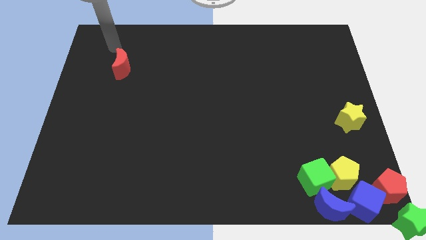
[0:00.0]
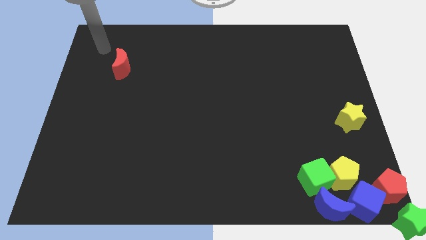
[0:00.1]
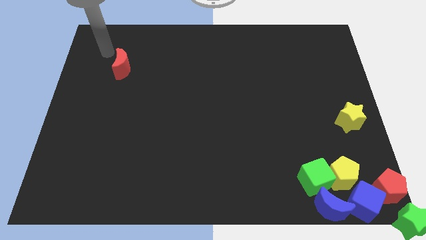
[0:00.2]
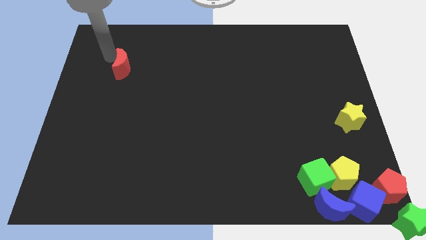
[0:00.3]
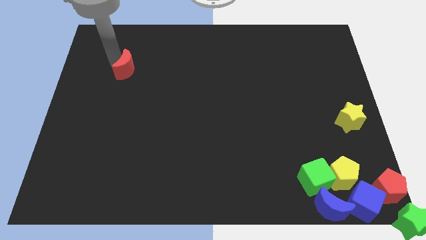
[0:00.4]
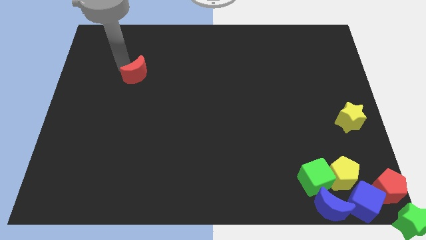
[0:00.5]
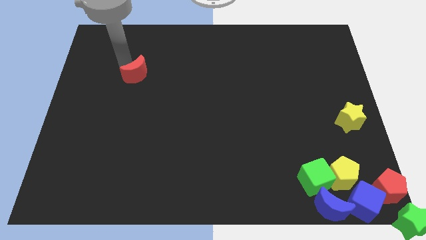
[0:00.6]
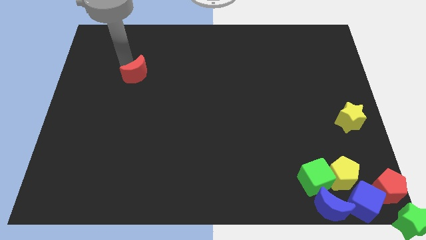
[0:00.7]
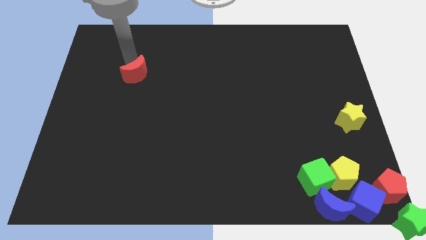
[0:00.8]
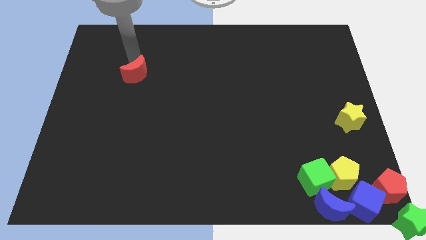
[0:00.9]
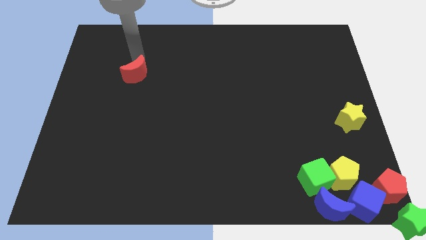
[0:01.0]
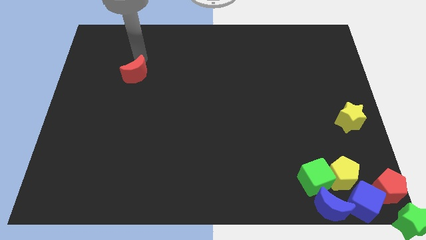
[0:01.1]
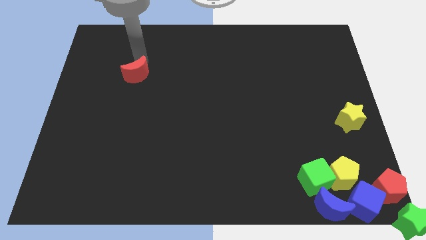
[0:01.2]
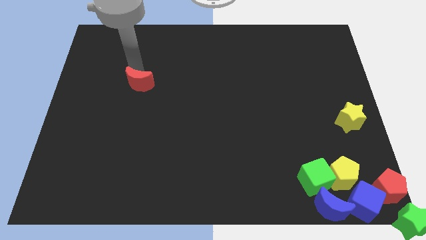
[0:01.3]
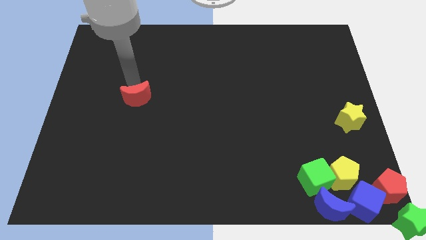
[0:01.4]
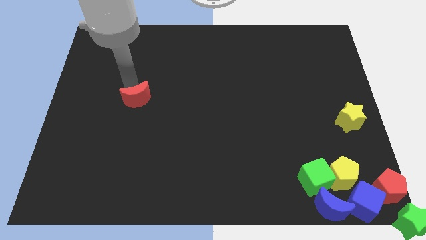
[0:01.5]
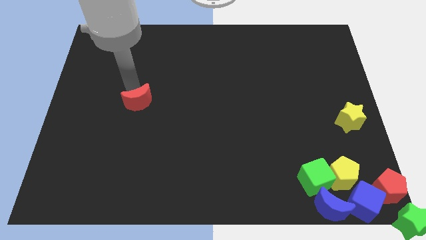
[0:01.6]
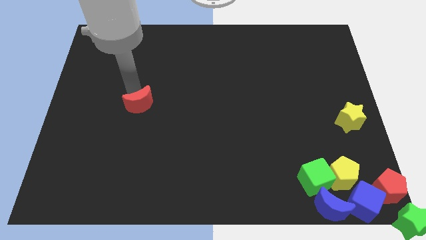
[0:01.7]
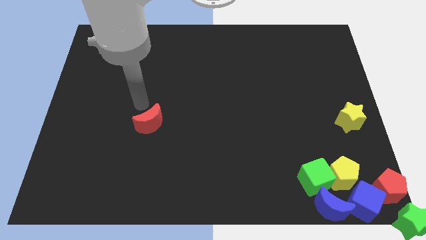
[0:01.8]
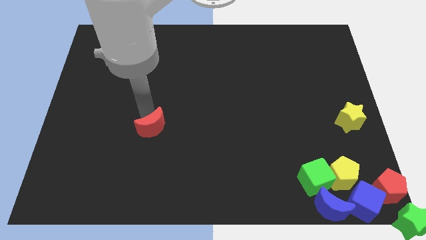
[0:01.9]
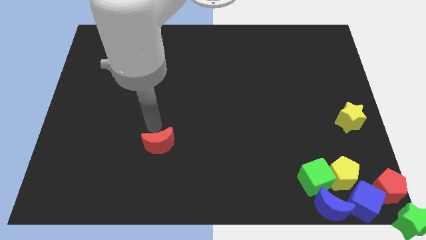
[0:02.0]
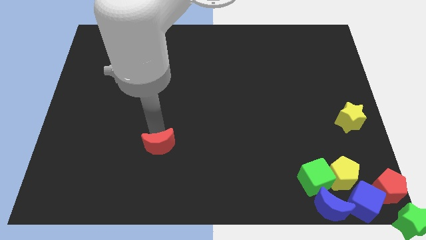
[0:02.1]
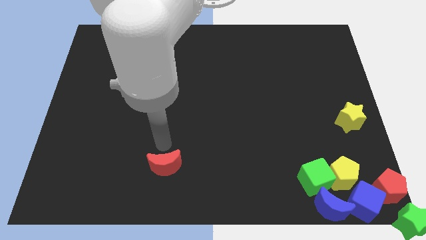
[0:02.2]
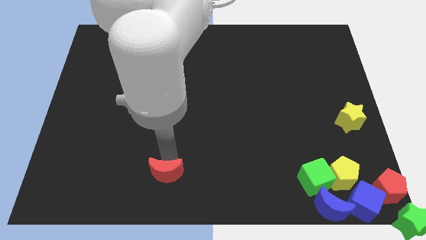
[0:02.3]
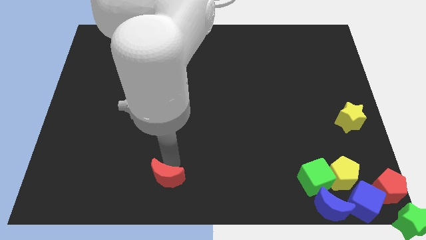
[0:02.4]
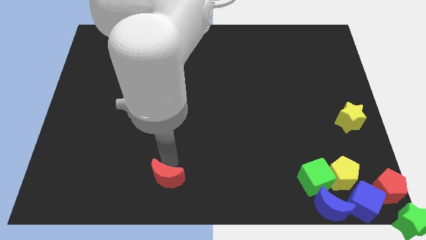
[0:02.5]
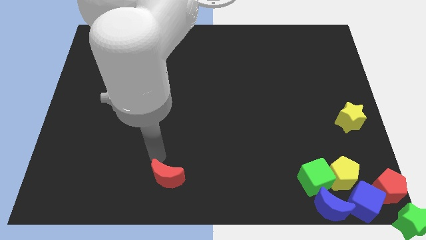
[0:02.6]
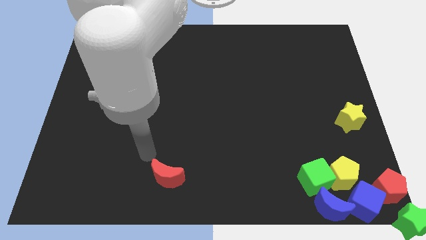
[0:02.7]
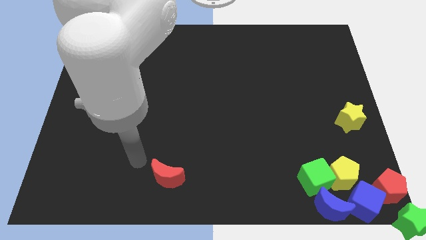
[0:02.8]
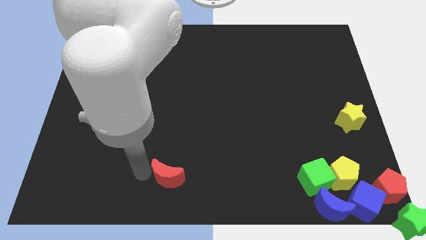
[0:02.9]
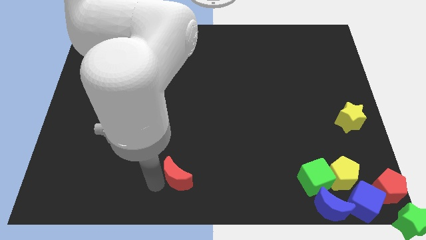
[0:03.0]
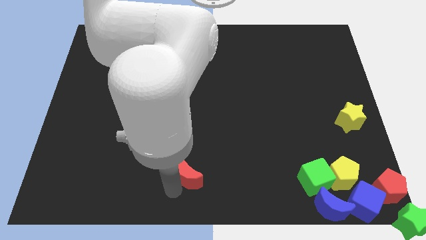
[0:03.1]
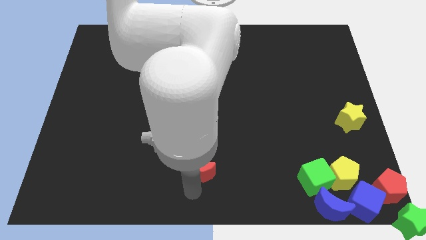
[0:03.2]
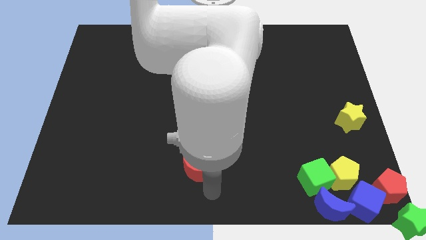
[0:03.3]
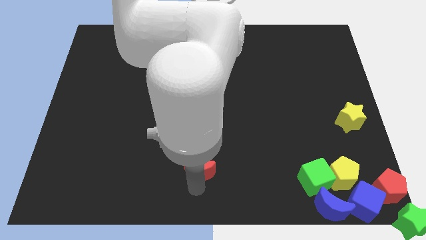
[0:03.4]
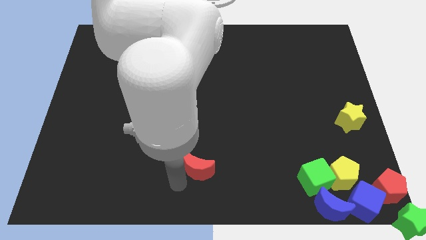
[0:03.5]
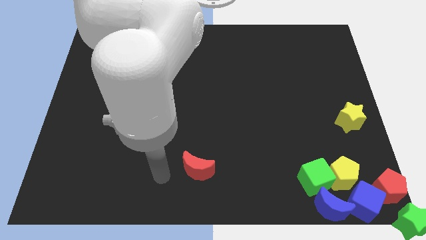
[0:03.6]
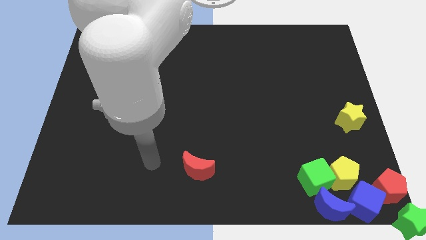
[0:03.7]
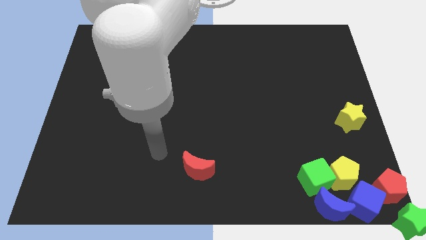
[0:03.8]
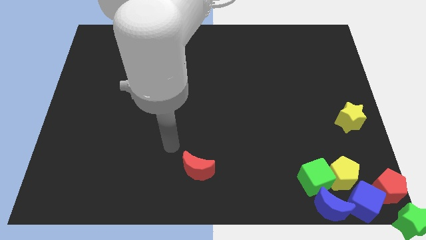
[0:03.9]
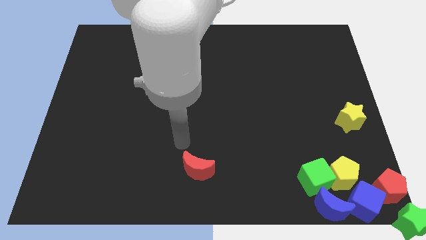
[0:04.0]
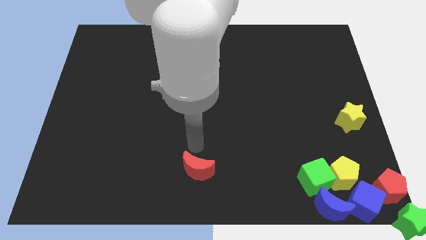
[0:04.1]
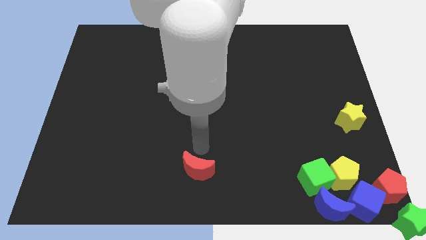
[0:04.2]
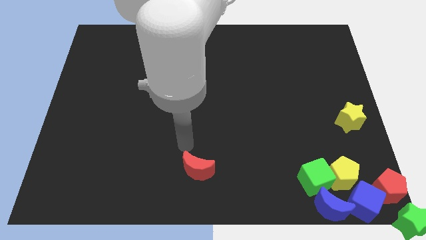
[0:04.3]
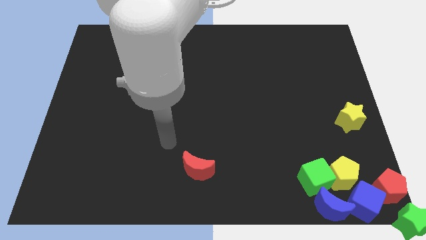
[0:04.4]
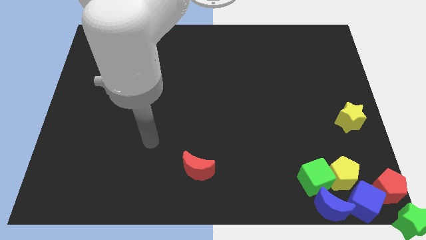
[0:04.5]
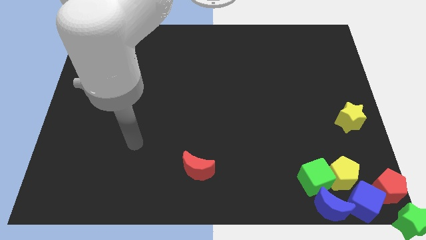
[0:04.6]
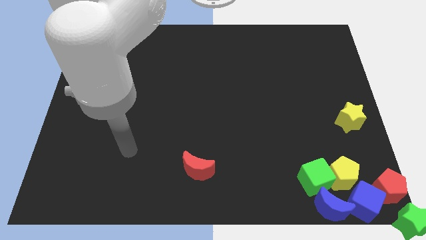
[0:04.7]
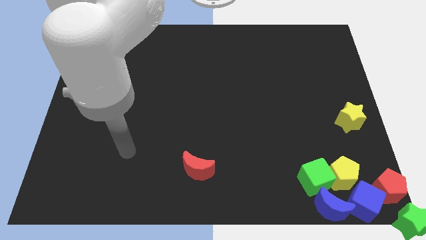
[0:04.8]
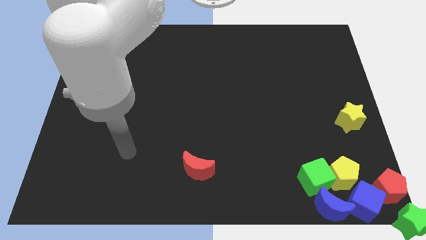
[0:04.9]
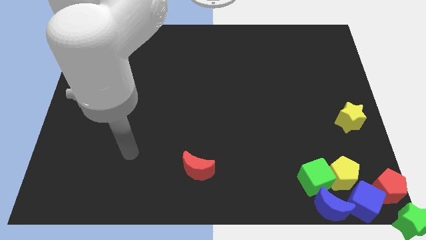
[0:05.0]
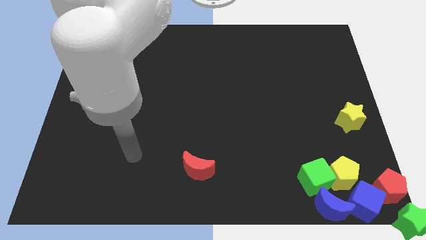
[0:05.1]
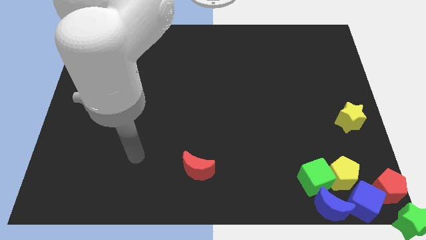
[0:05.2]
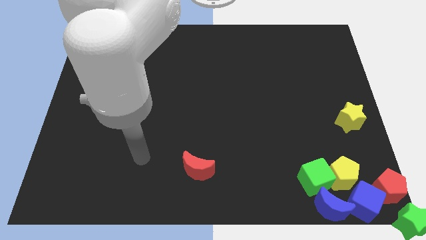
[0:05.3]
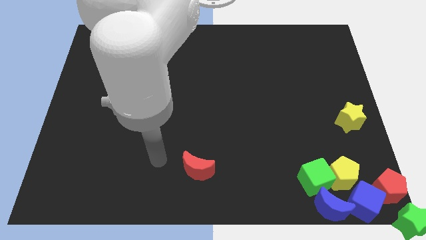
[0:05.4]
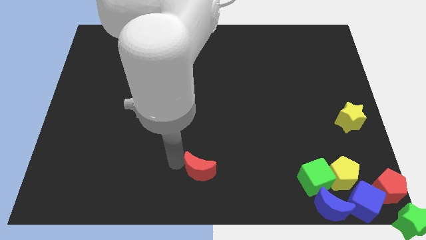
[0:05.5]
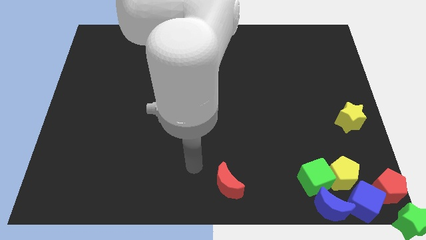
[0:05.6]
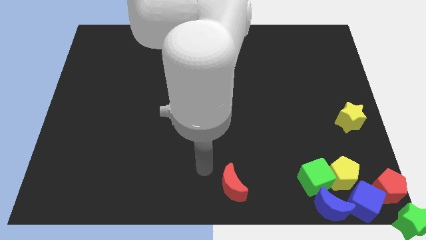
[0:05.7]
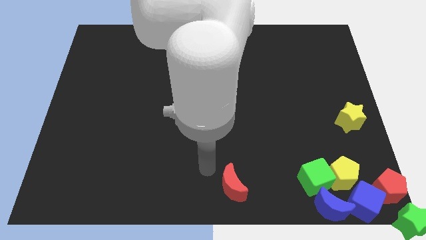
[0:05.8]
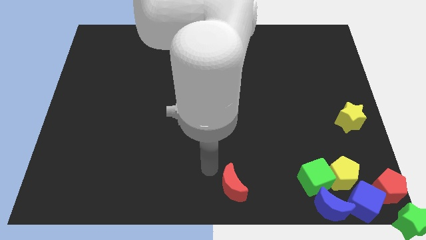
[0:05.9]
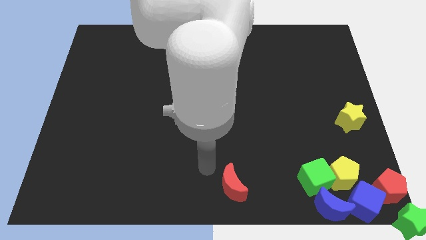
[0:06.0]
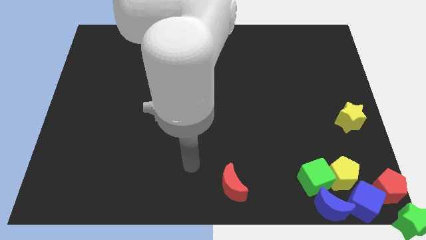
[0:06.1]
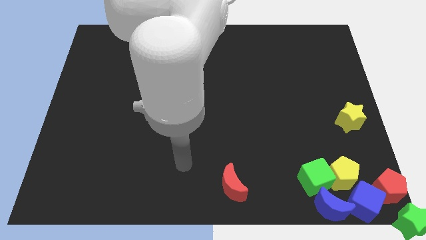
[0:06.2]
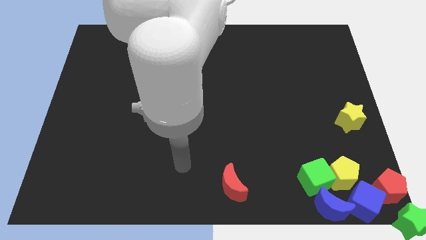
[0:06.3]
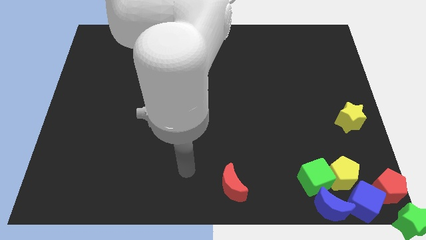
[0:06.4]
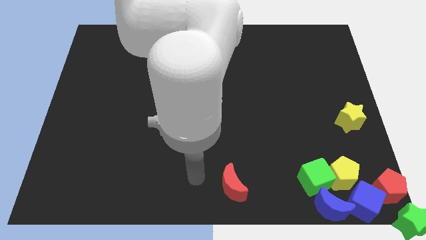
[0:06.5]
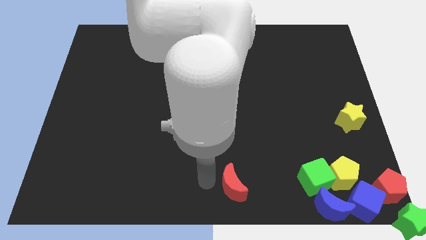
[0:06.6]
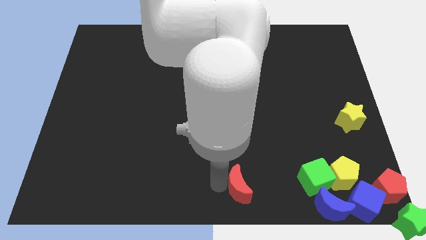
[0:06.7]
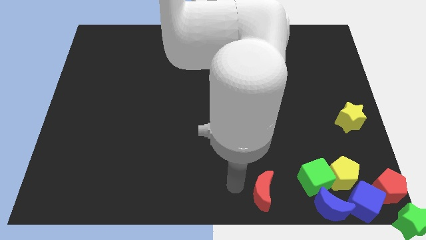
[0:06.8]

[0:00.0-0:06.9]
push the red crescent left to the green cube

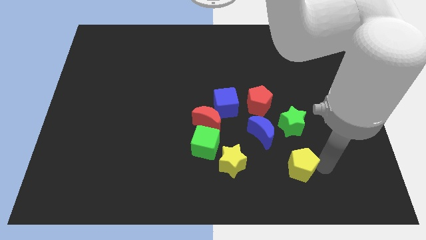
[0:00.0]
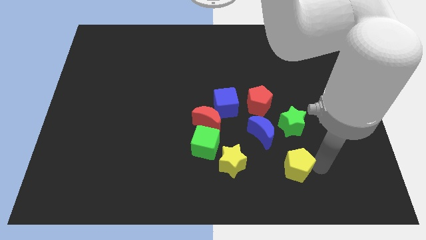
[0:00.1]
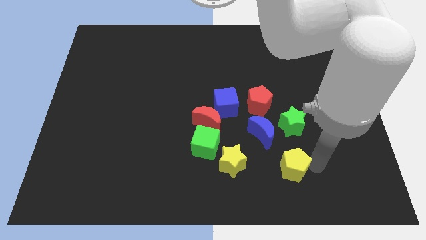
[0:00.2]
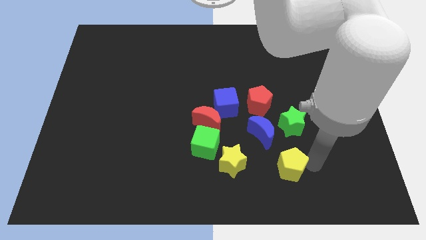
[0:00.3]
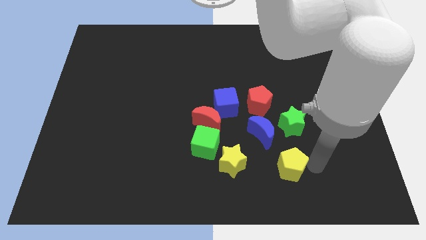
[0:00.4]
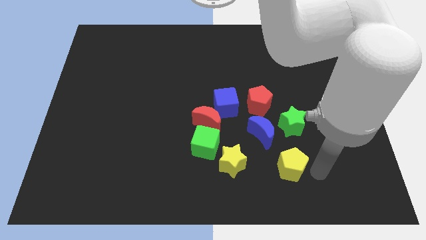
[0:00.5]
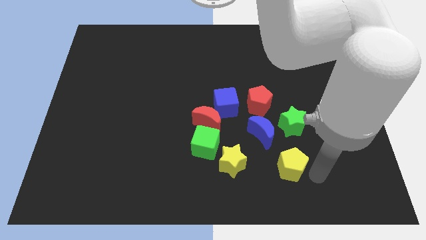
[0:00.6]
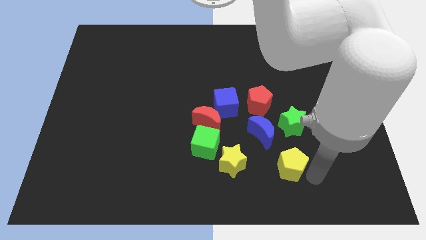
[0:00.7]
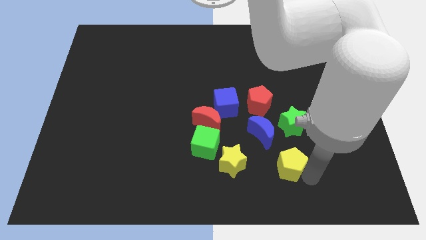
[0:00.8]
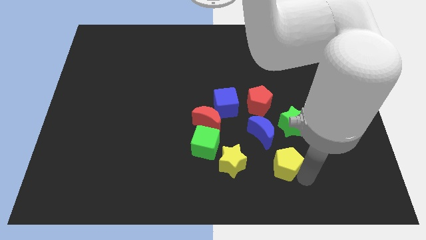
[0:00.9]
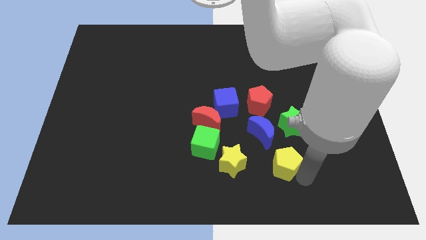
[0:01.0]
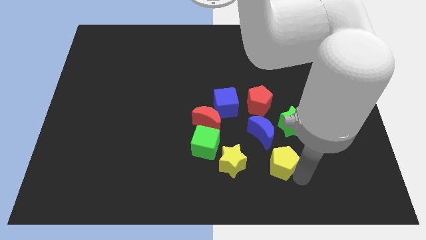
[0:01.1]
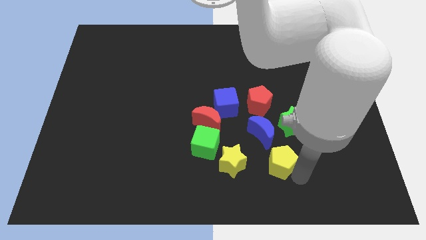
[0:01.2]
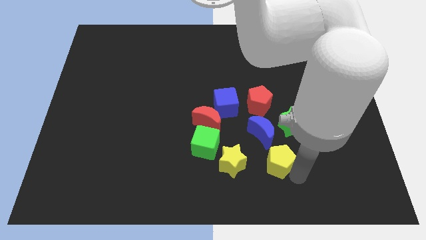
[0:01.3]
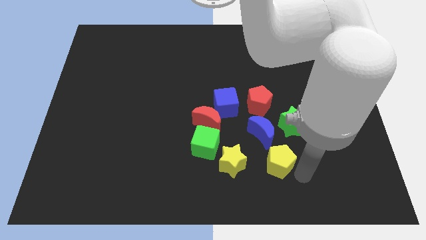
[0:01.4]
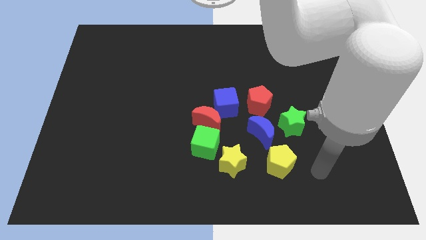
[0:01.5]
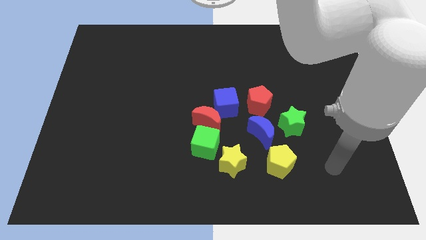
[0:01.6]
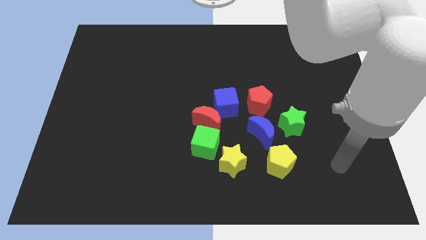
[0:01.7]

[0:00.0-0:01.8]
push yellow pentagon close to blue crescent

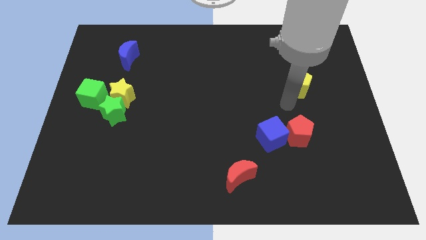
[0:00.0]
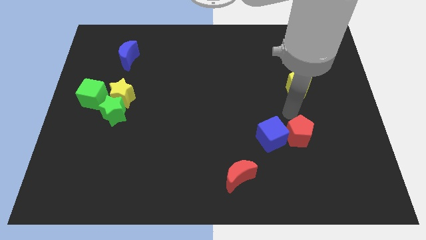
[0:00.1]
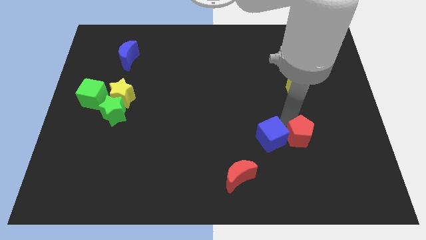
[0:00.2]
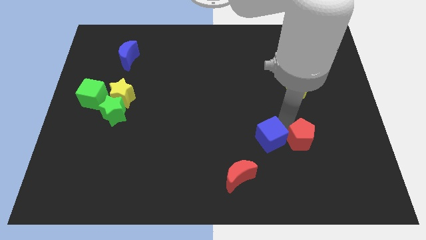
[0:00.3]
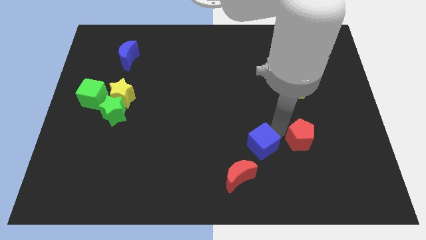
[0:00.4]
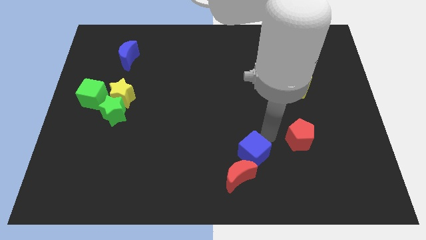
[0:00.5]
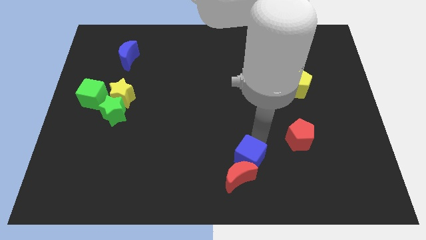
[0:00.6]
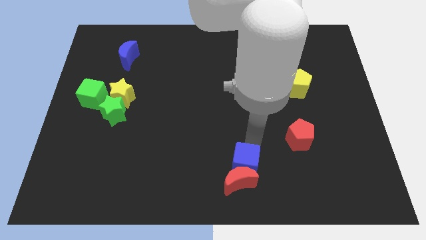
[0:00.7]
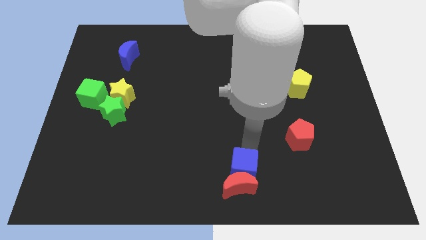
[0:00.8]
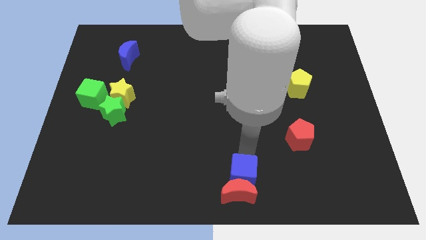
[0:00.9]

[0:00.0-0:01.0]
push the blue cube into the red moon
